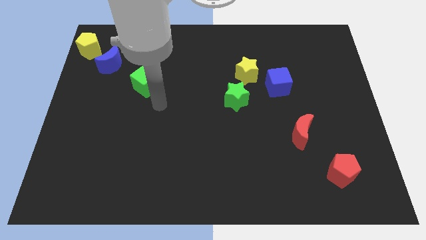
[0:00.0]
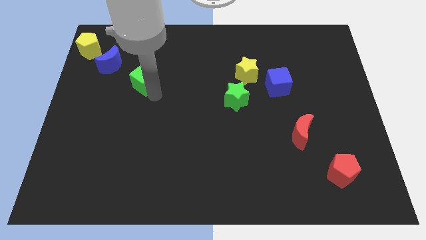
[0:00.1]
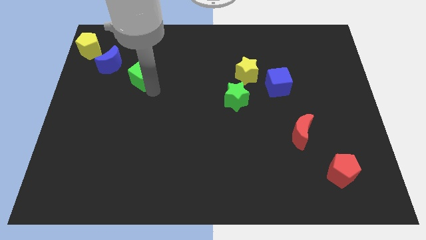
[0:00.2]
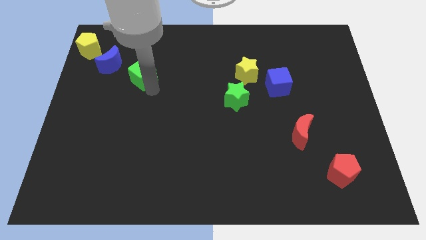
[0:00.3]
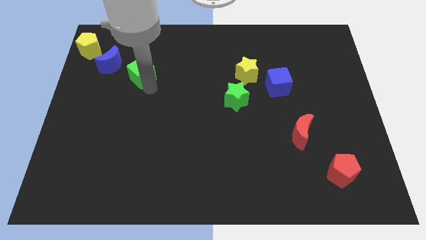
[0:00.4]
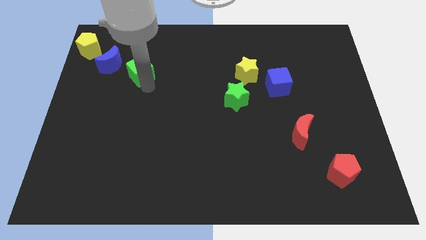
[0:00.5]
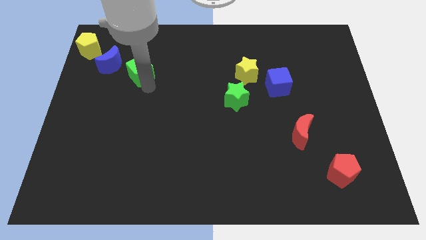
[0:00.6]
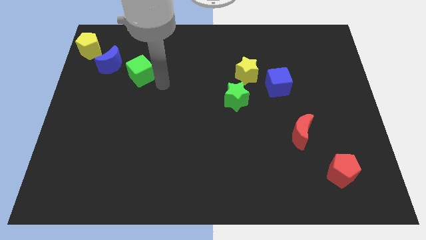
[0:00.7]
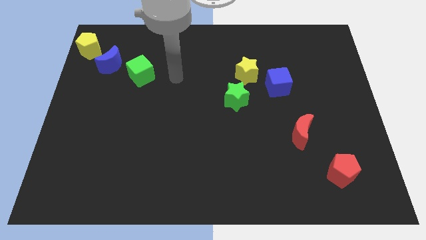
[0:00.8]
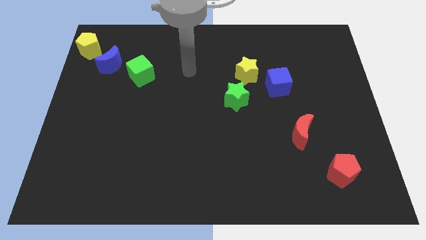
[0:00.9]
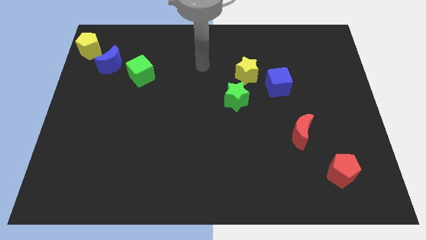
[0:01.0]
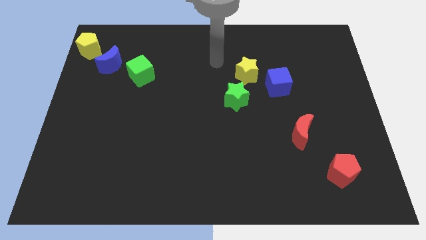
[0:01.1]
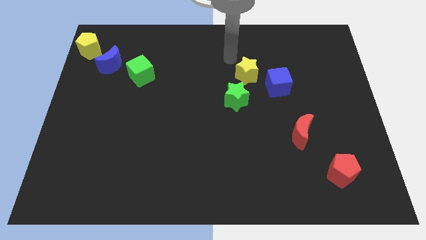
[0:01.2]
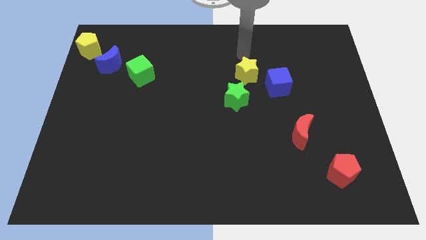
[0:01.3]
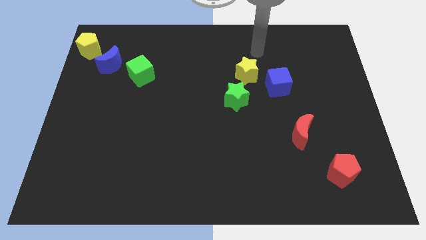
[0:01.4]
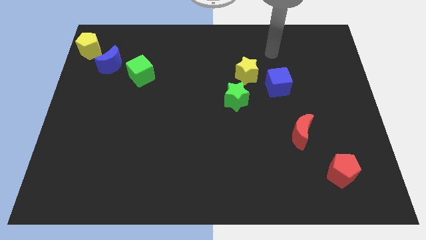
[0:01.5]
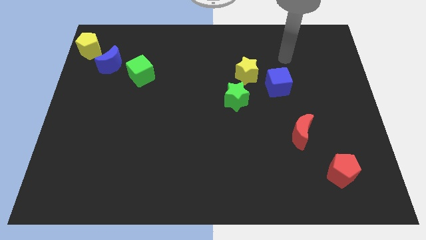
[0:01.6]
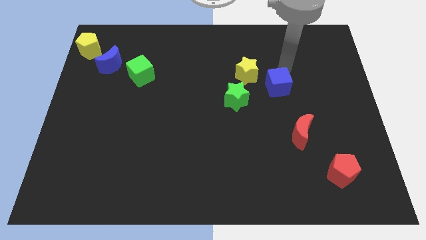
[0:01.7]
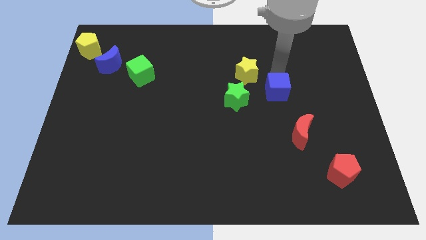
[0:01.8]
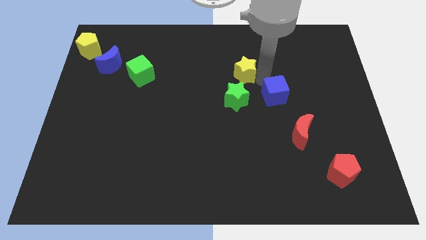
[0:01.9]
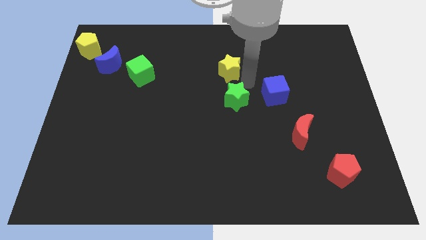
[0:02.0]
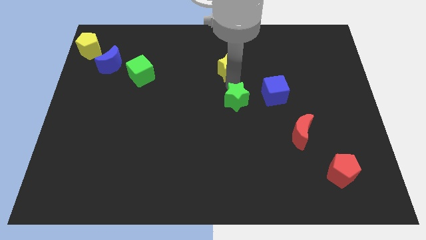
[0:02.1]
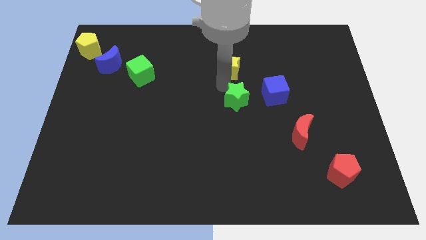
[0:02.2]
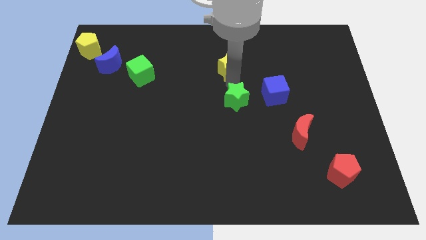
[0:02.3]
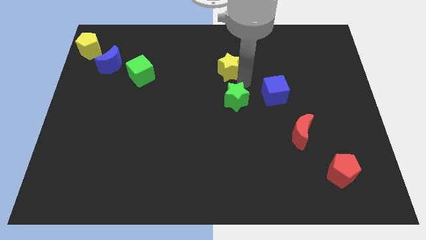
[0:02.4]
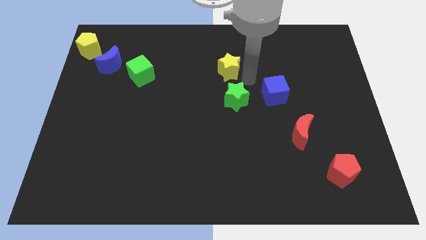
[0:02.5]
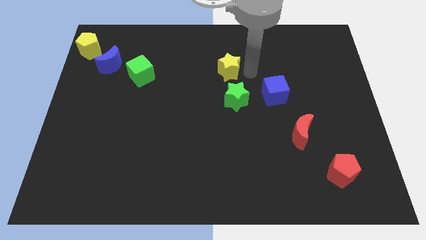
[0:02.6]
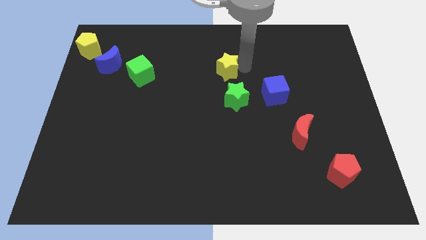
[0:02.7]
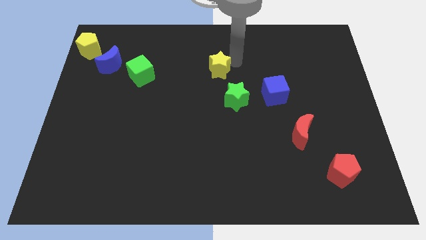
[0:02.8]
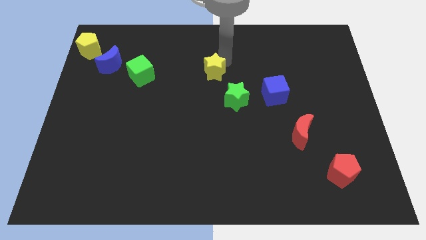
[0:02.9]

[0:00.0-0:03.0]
move the yellow star near right to the green cube

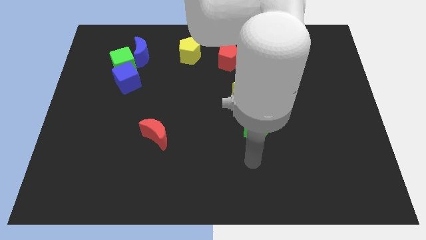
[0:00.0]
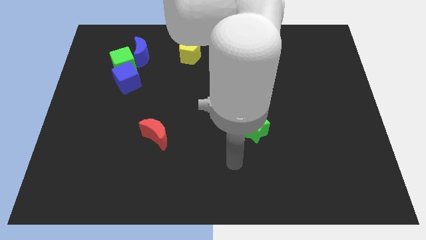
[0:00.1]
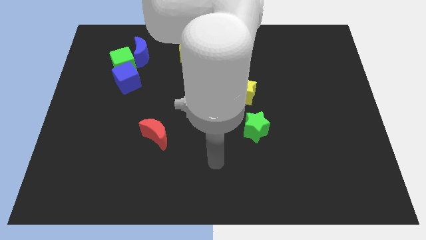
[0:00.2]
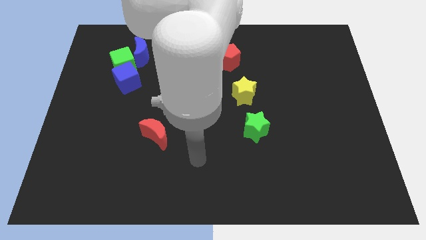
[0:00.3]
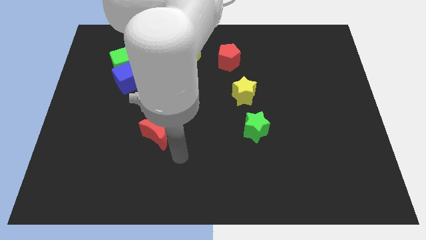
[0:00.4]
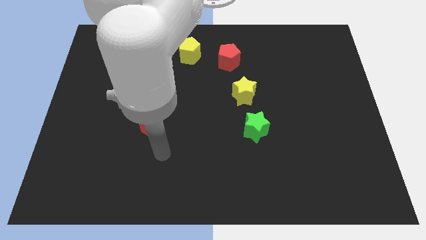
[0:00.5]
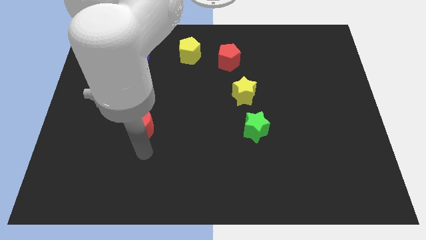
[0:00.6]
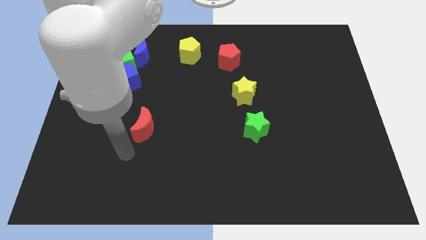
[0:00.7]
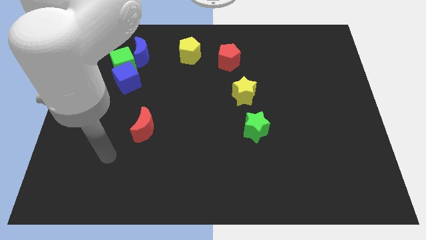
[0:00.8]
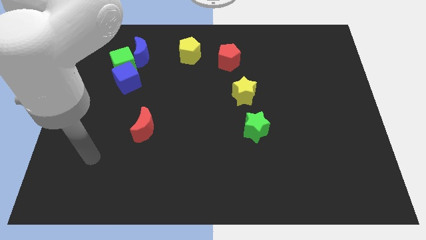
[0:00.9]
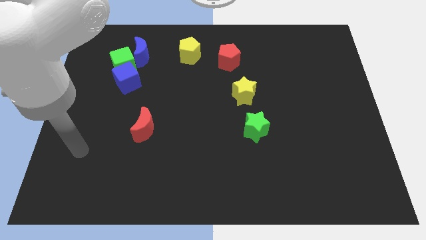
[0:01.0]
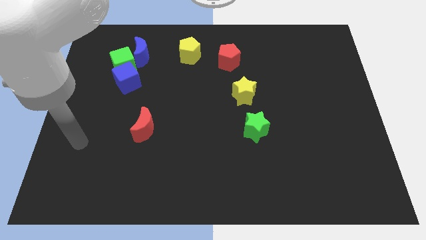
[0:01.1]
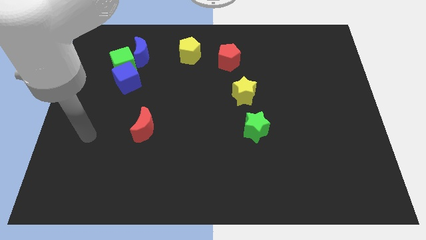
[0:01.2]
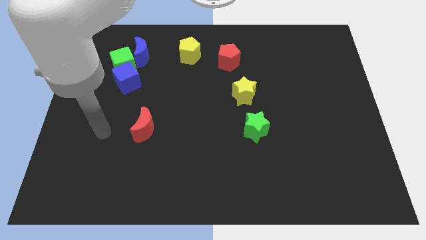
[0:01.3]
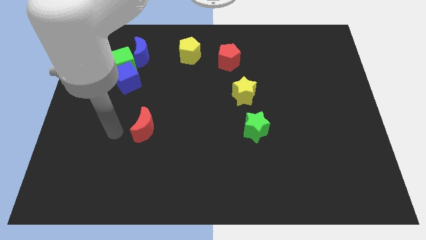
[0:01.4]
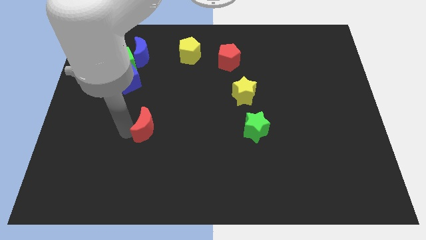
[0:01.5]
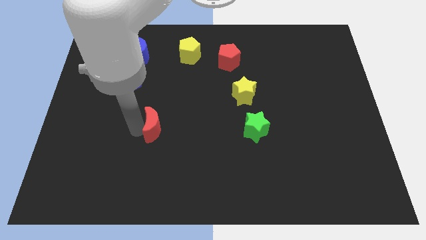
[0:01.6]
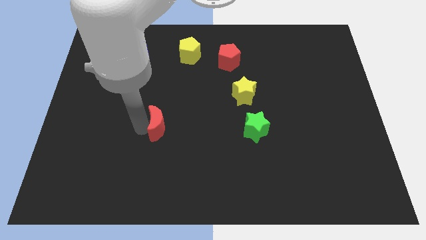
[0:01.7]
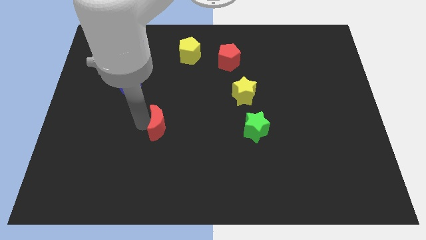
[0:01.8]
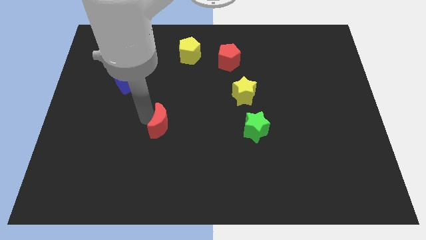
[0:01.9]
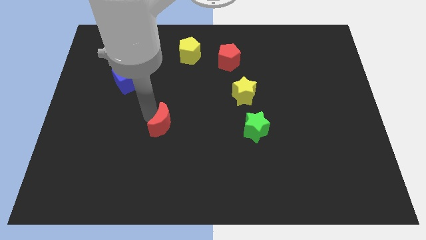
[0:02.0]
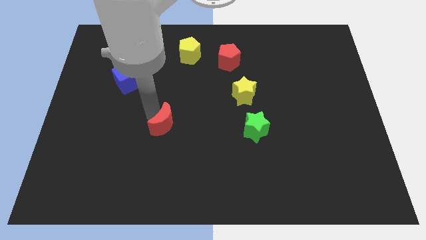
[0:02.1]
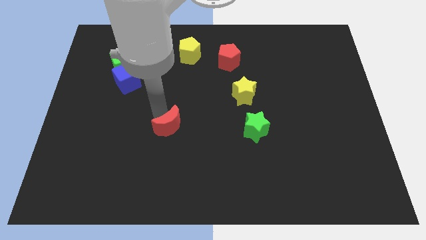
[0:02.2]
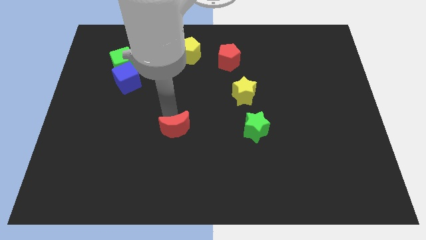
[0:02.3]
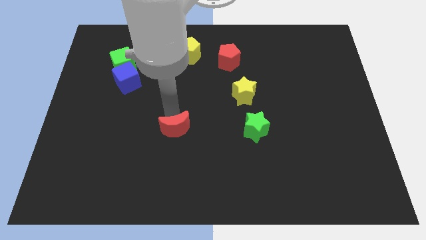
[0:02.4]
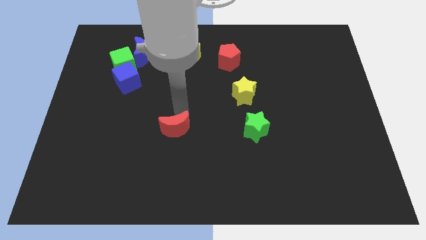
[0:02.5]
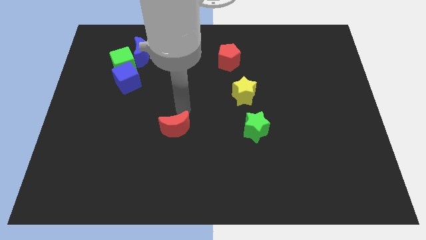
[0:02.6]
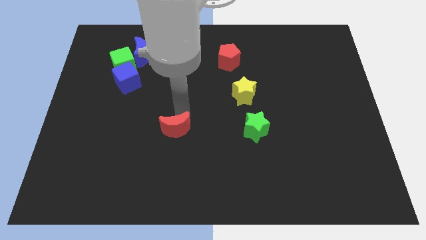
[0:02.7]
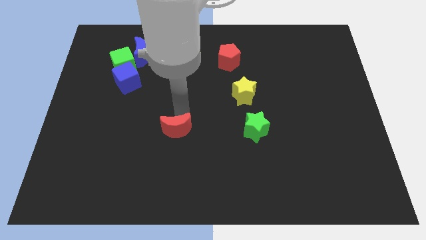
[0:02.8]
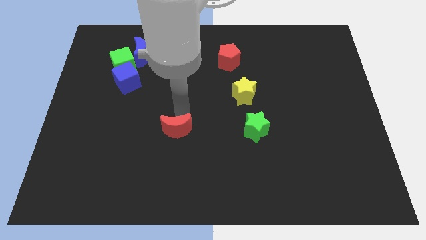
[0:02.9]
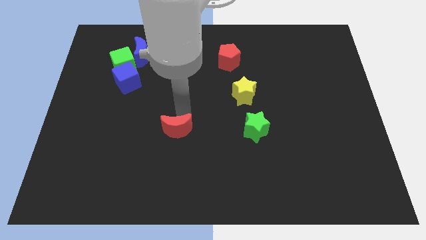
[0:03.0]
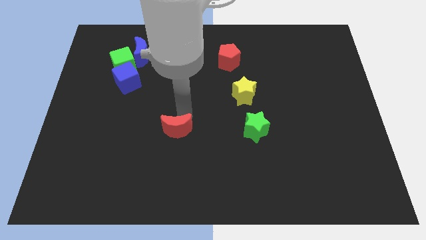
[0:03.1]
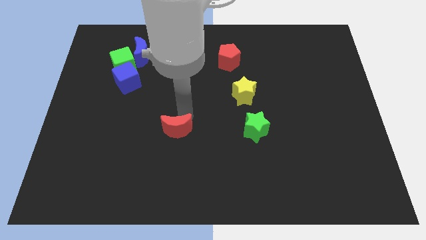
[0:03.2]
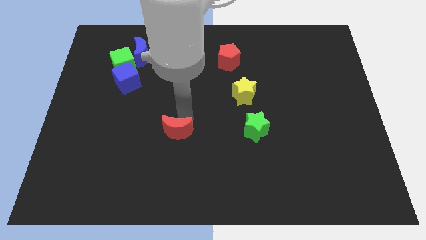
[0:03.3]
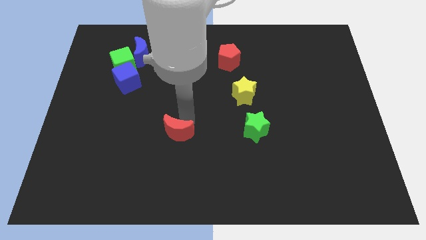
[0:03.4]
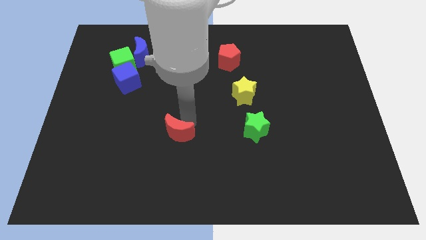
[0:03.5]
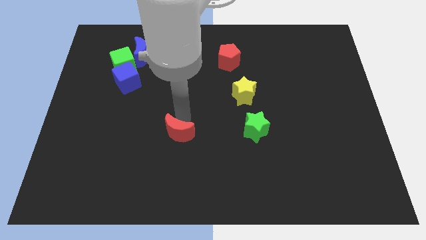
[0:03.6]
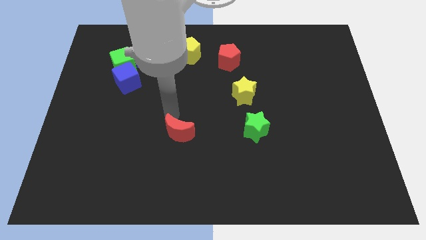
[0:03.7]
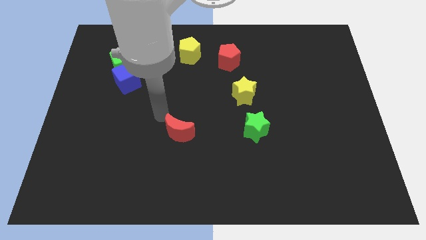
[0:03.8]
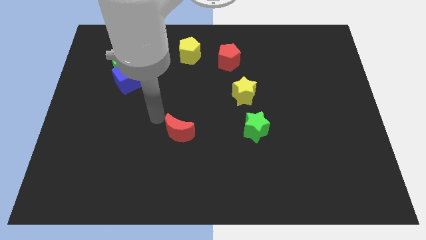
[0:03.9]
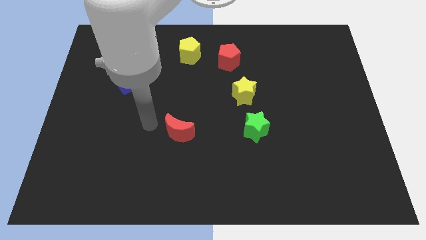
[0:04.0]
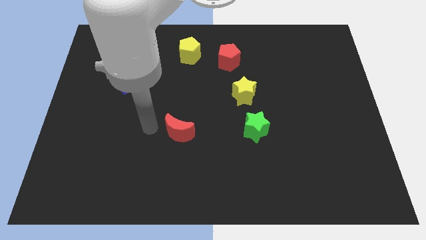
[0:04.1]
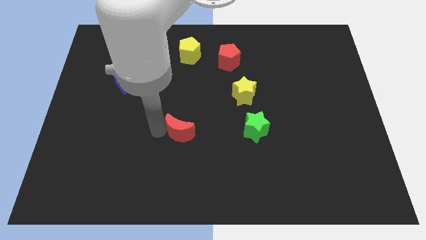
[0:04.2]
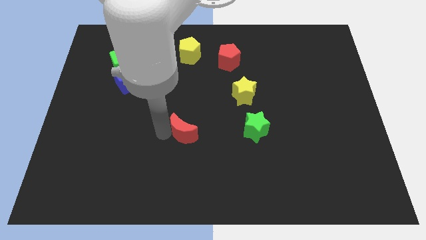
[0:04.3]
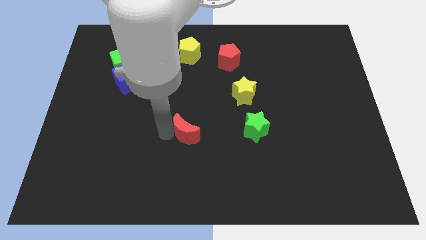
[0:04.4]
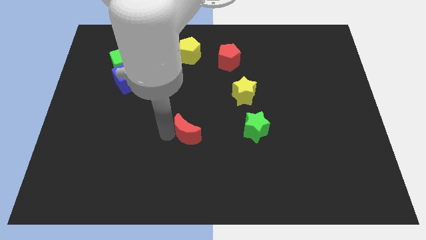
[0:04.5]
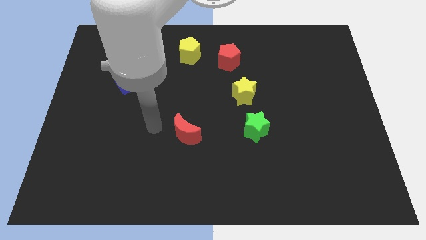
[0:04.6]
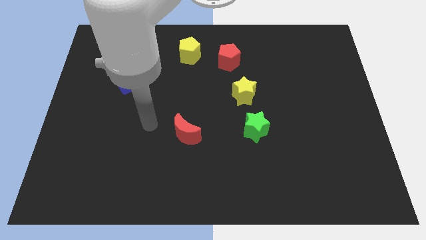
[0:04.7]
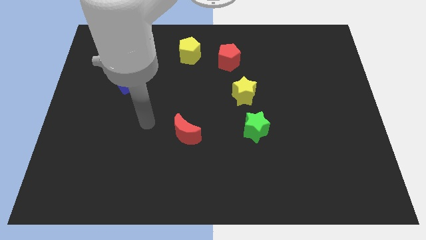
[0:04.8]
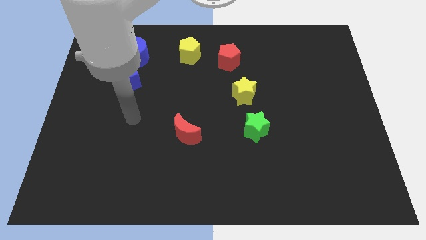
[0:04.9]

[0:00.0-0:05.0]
move the red crescent to the center of the board

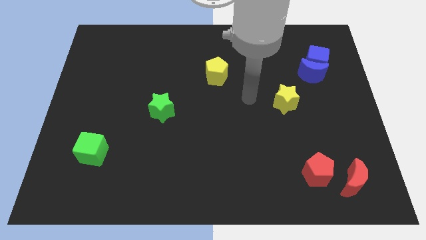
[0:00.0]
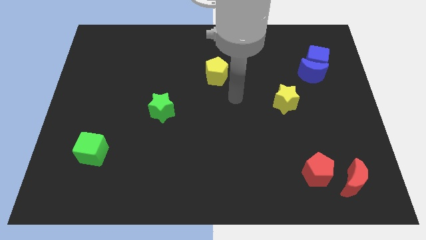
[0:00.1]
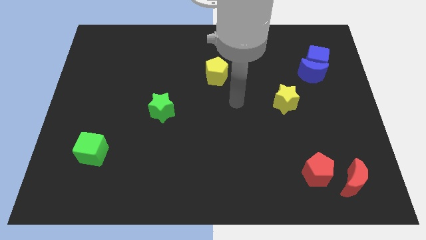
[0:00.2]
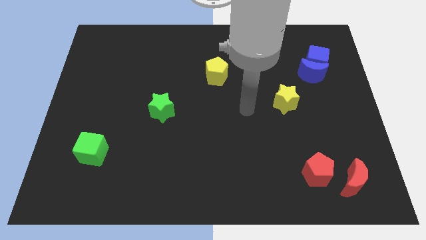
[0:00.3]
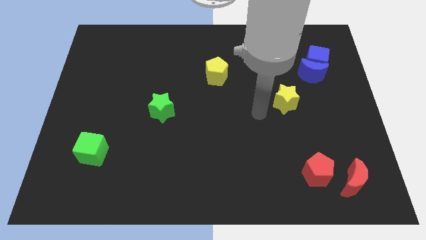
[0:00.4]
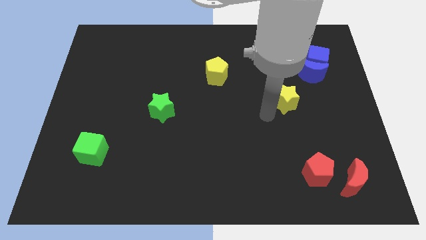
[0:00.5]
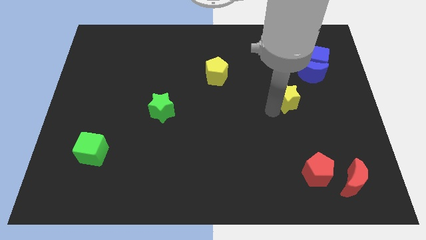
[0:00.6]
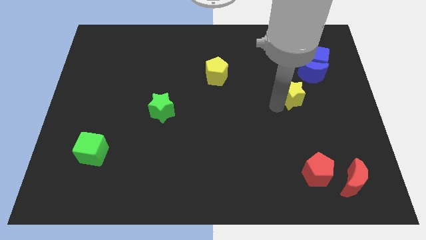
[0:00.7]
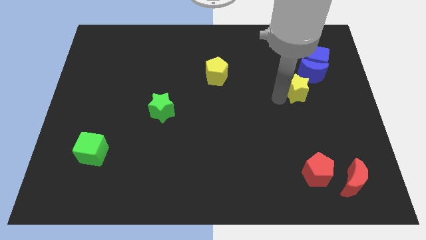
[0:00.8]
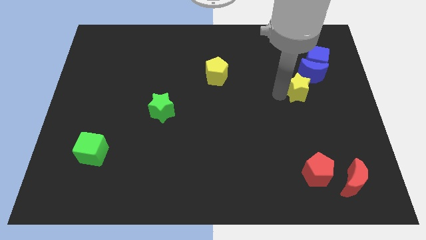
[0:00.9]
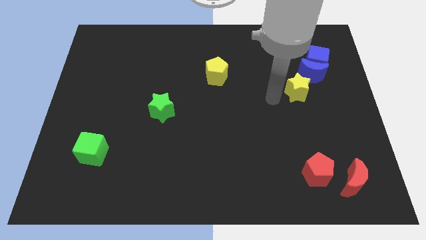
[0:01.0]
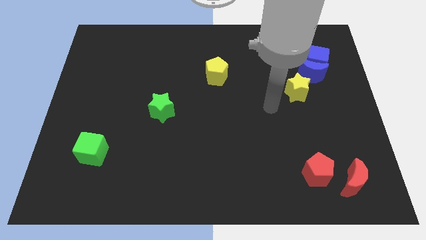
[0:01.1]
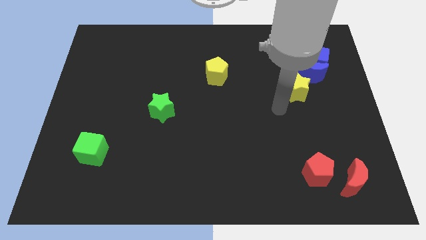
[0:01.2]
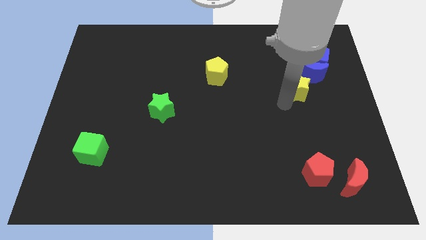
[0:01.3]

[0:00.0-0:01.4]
move the yellow star close to the blue semi circle
